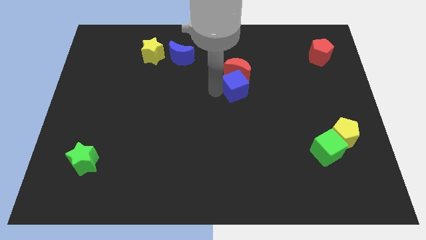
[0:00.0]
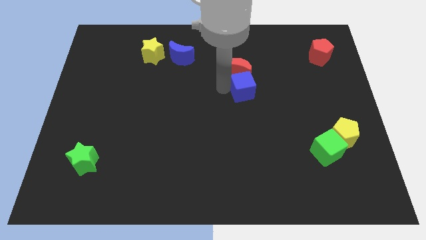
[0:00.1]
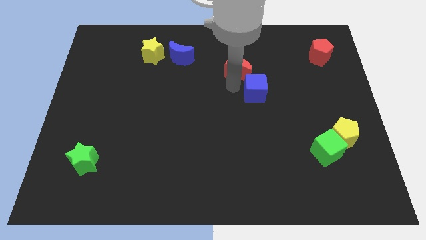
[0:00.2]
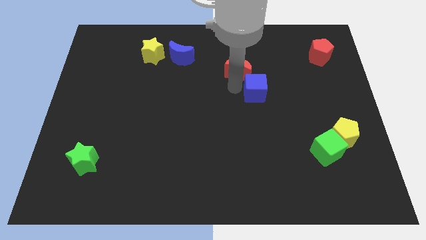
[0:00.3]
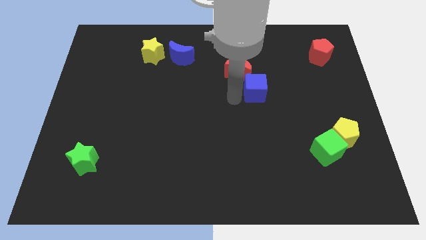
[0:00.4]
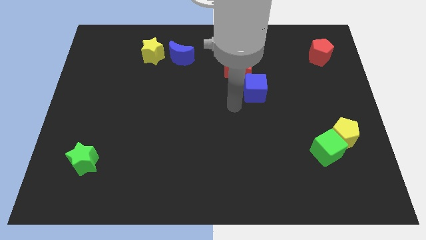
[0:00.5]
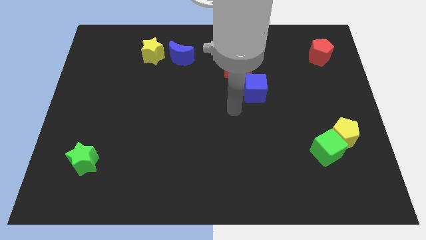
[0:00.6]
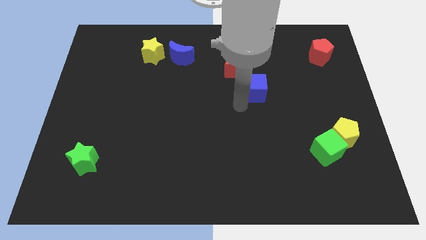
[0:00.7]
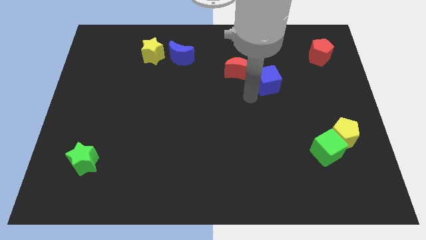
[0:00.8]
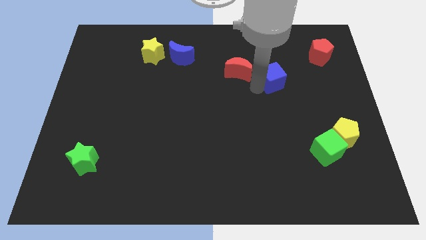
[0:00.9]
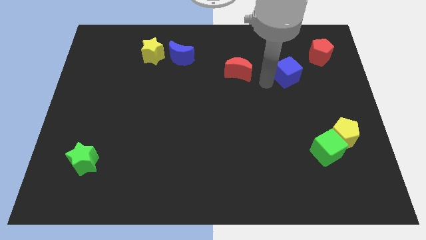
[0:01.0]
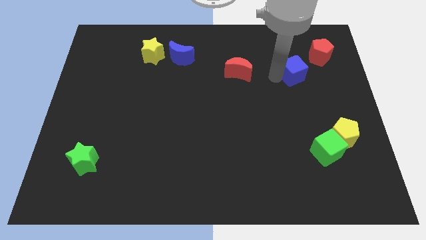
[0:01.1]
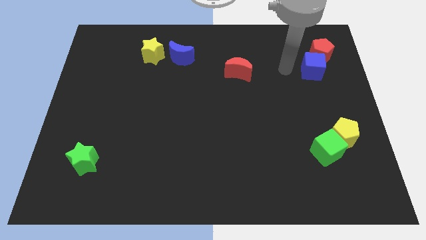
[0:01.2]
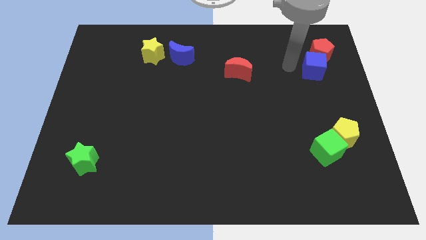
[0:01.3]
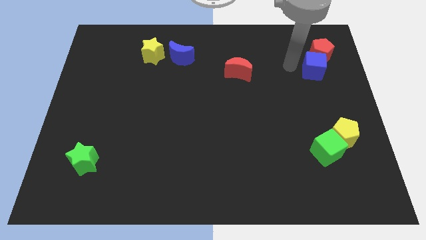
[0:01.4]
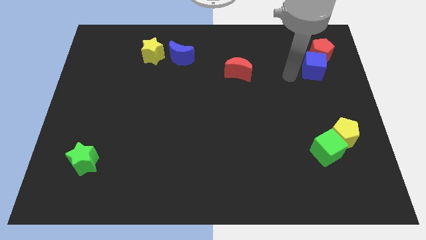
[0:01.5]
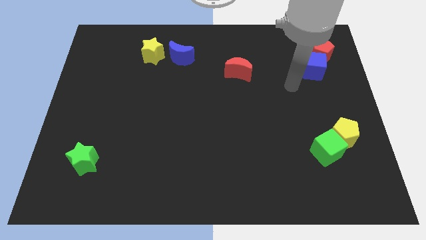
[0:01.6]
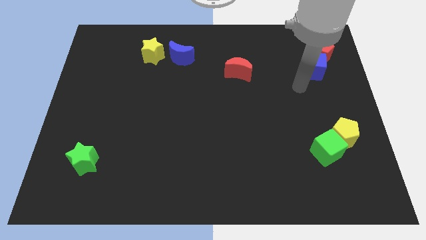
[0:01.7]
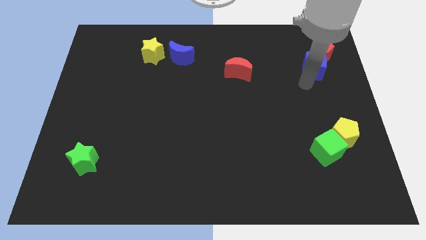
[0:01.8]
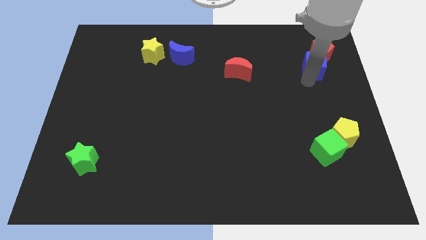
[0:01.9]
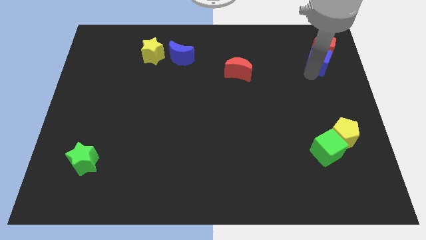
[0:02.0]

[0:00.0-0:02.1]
move the blue cube into the red pentagon

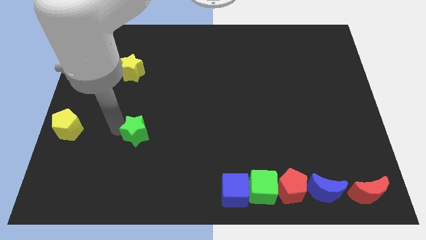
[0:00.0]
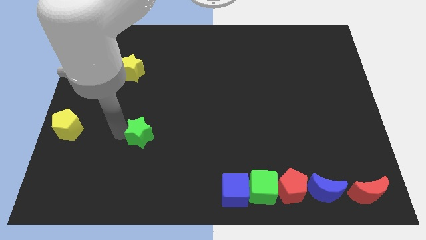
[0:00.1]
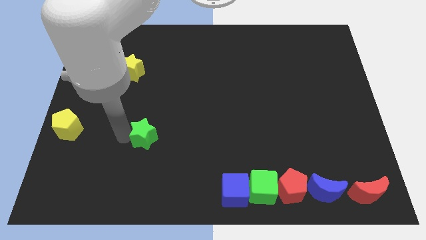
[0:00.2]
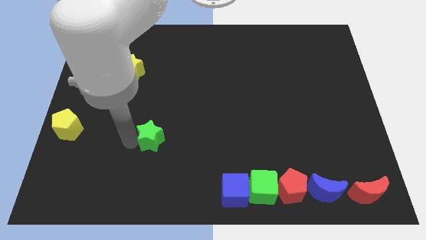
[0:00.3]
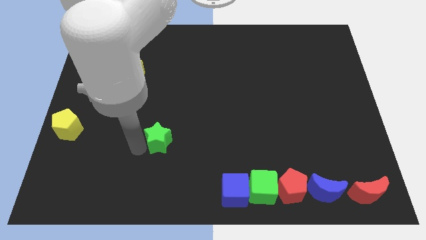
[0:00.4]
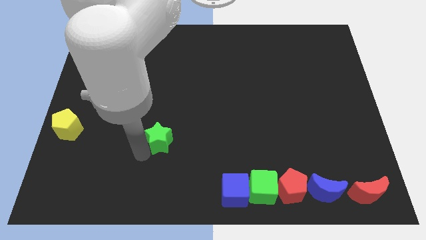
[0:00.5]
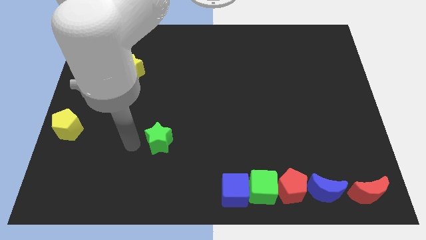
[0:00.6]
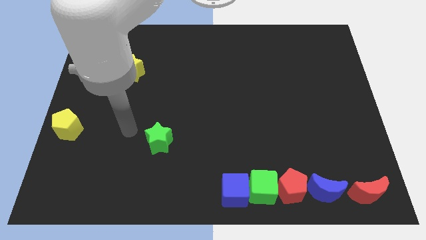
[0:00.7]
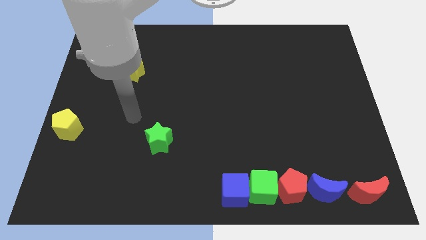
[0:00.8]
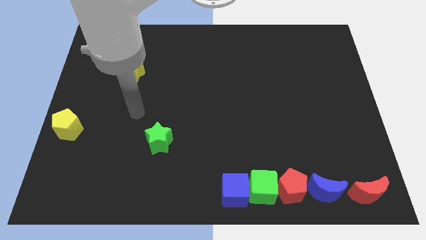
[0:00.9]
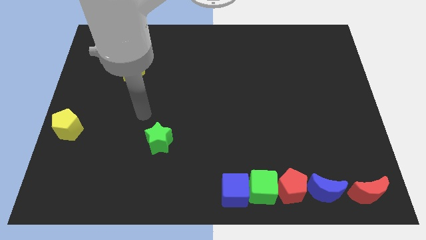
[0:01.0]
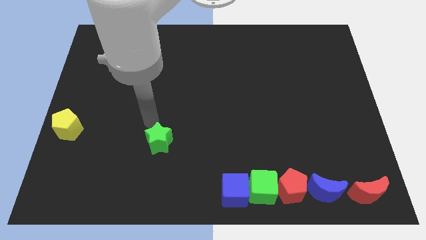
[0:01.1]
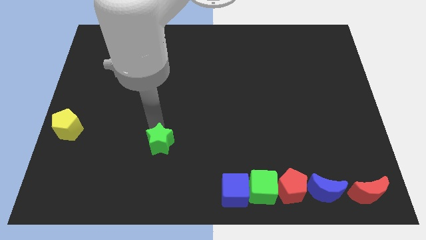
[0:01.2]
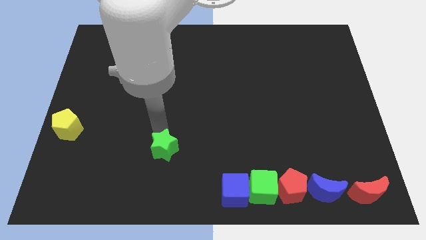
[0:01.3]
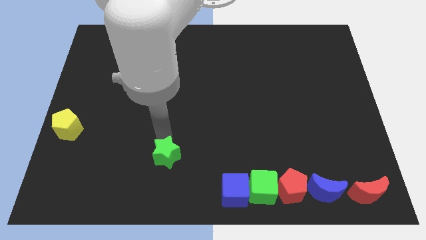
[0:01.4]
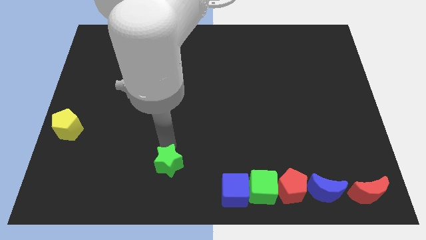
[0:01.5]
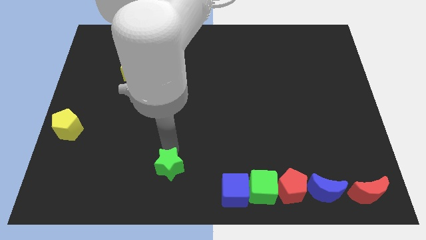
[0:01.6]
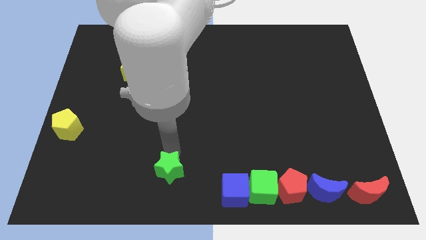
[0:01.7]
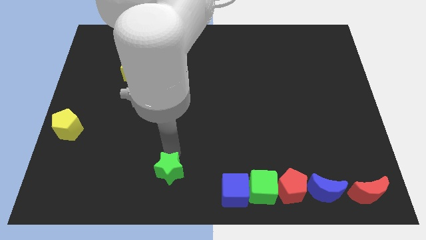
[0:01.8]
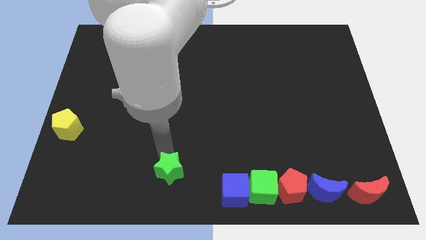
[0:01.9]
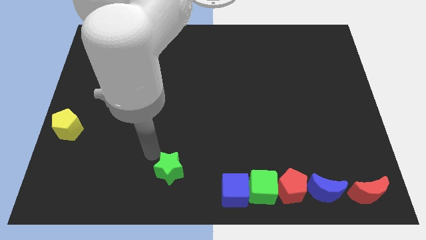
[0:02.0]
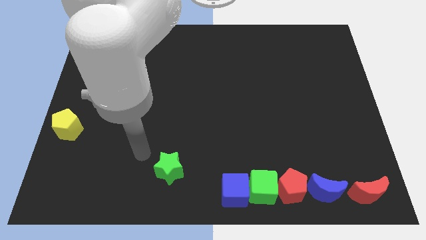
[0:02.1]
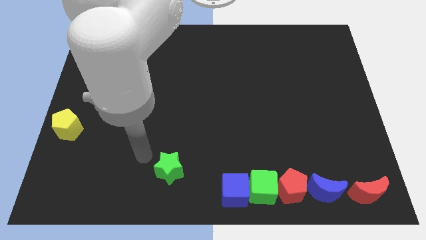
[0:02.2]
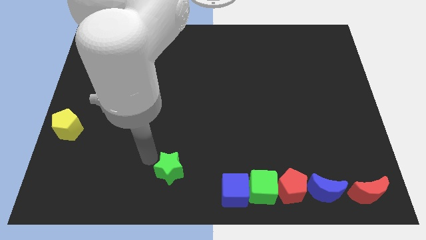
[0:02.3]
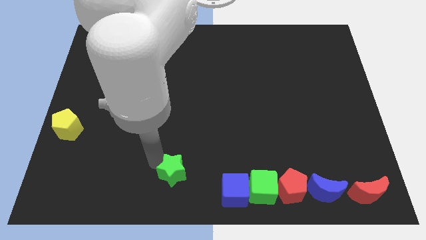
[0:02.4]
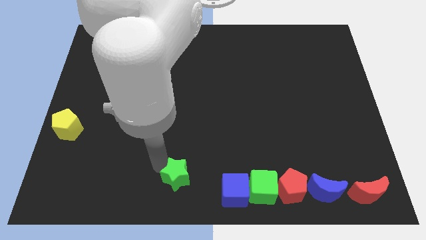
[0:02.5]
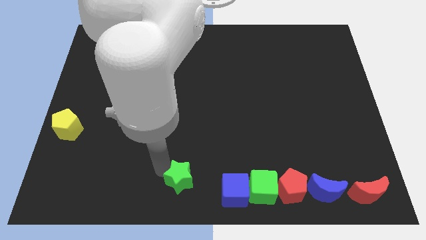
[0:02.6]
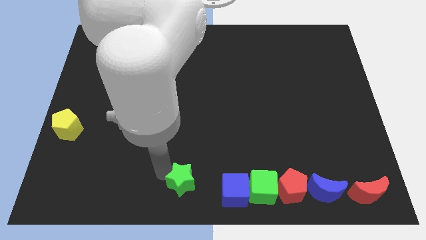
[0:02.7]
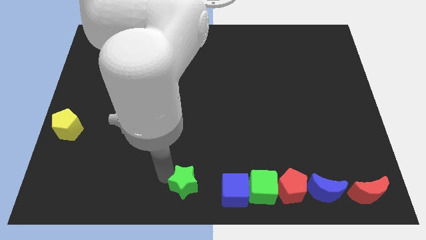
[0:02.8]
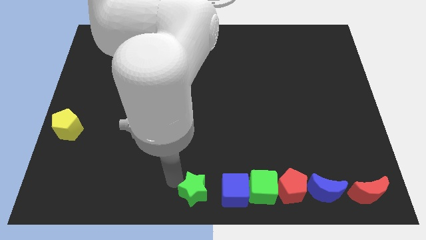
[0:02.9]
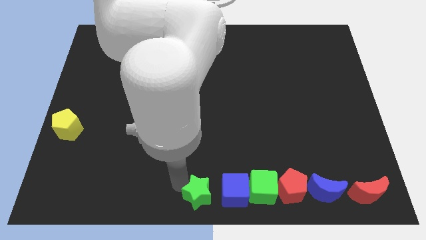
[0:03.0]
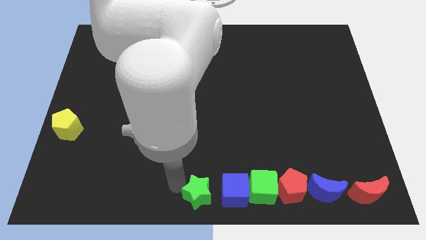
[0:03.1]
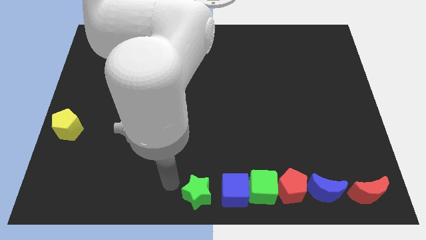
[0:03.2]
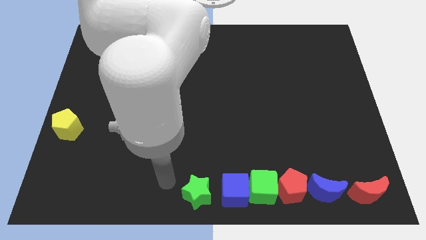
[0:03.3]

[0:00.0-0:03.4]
place the green star to the left side of blue cube

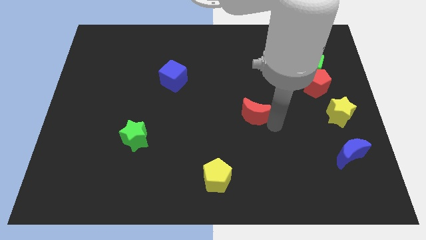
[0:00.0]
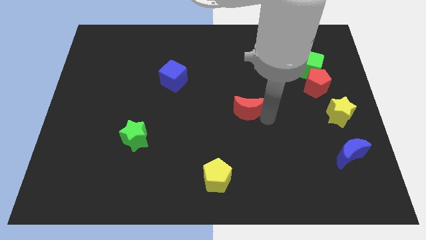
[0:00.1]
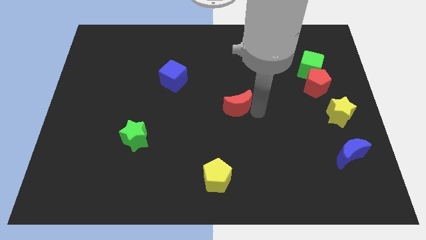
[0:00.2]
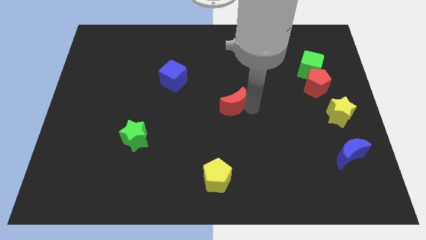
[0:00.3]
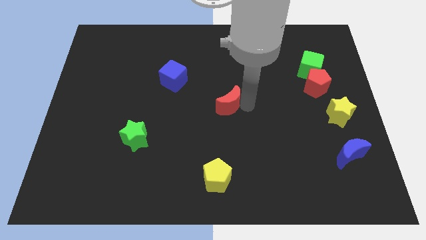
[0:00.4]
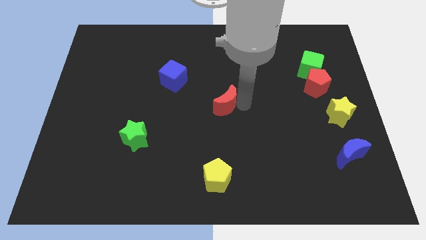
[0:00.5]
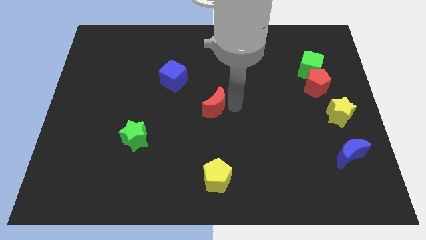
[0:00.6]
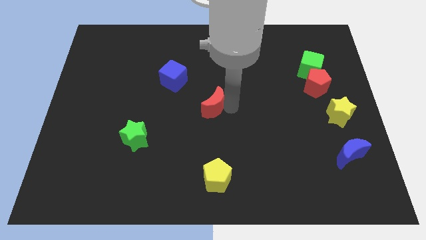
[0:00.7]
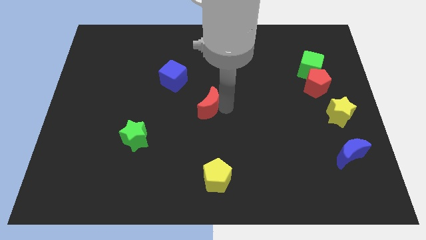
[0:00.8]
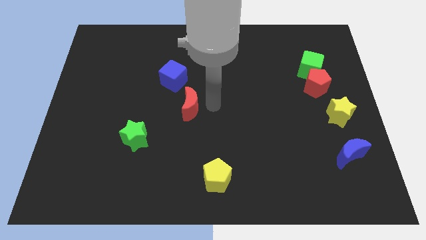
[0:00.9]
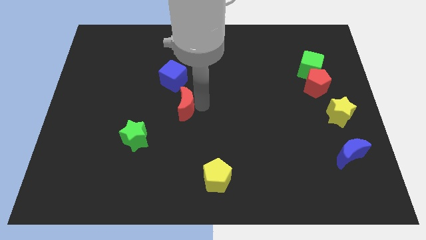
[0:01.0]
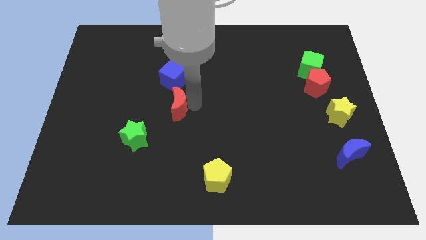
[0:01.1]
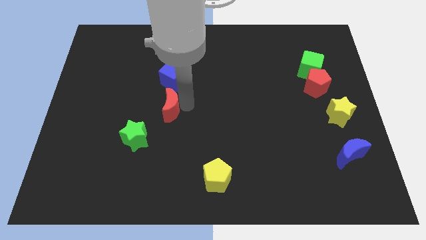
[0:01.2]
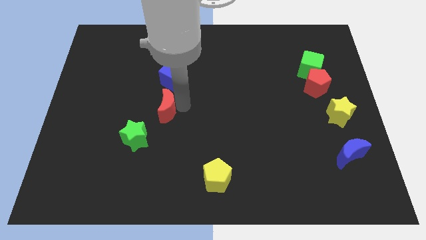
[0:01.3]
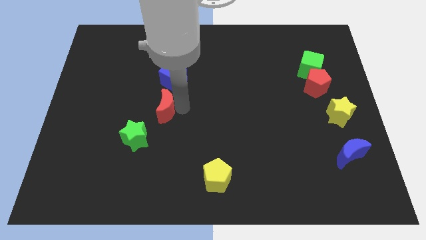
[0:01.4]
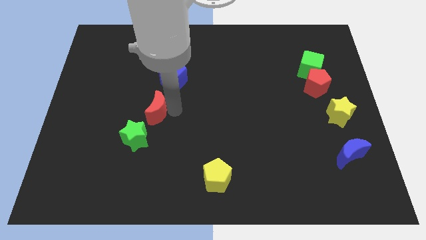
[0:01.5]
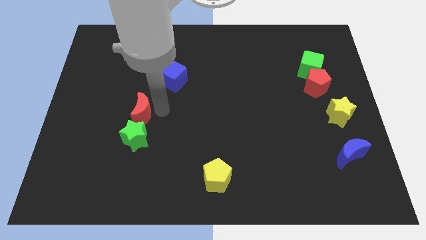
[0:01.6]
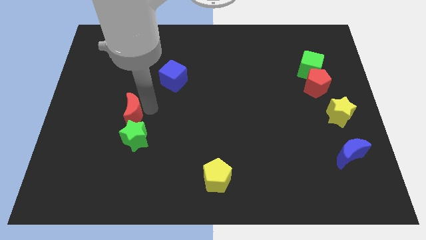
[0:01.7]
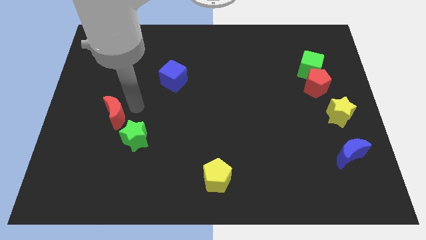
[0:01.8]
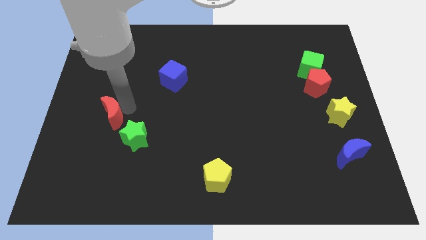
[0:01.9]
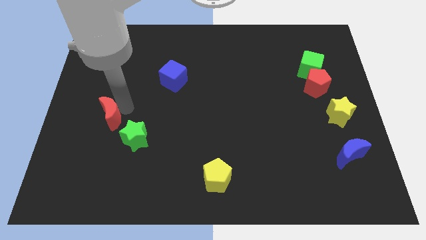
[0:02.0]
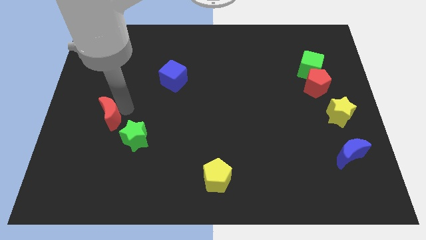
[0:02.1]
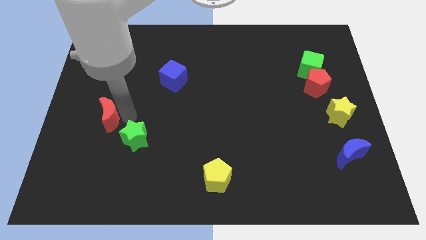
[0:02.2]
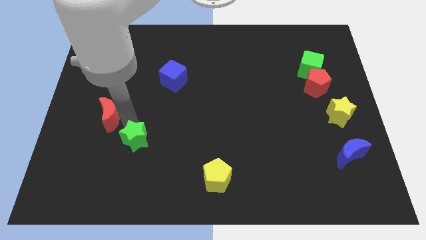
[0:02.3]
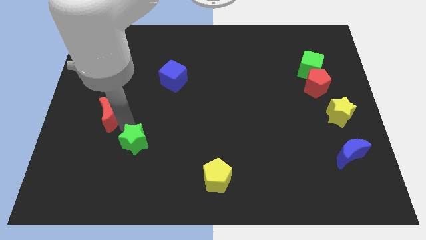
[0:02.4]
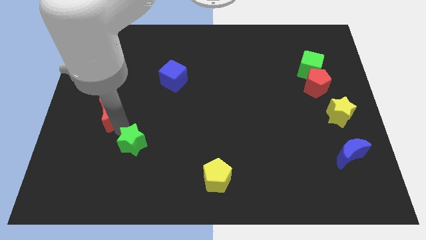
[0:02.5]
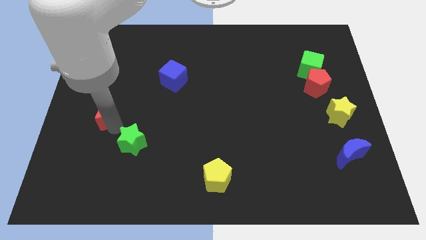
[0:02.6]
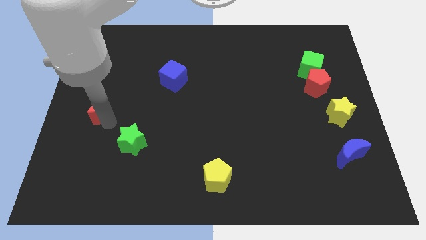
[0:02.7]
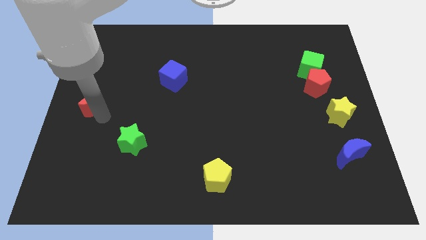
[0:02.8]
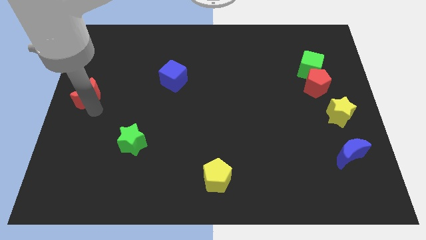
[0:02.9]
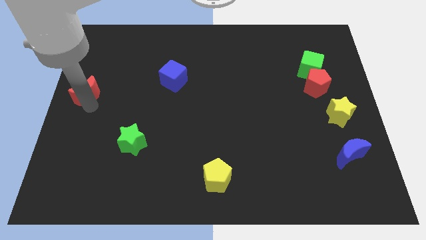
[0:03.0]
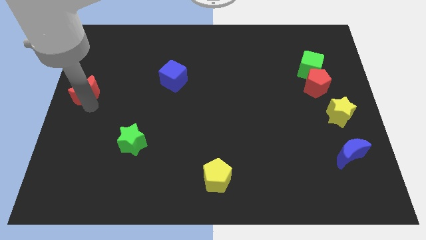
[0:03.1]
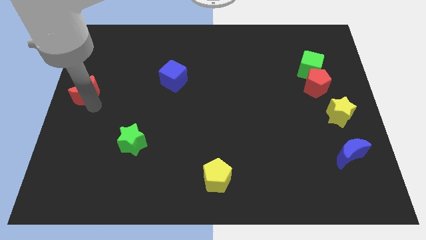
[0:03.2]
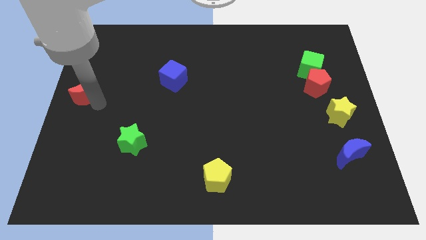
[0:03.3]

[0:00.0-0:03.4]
move the red crescent to the left center of the board
